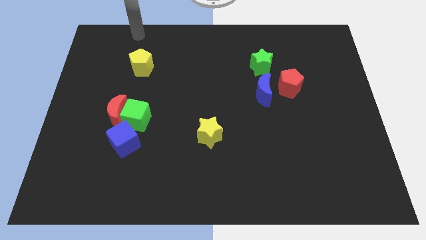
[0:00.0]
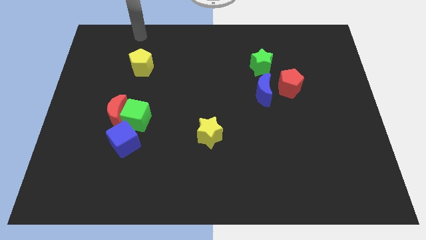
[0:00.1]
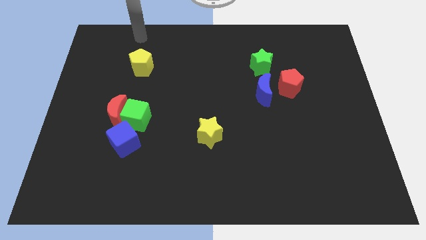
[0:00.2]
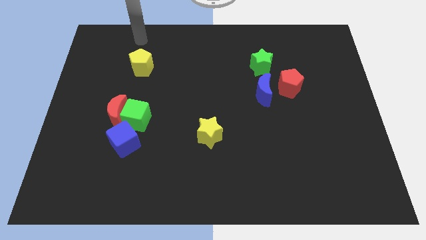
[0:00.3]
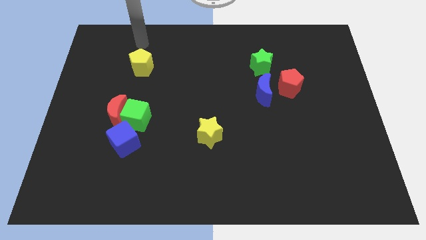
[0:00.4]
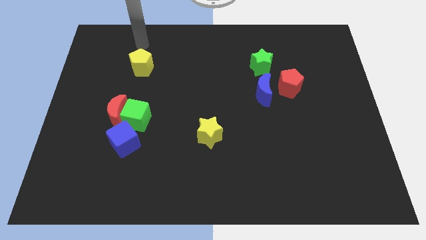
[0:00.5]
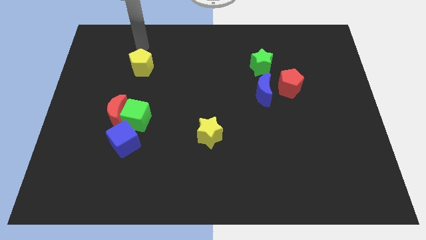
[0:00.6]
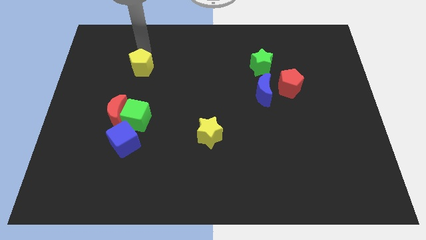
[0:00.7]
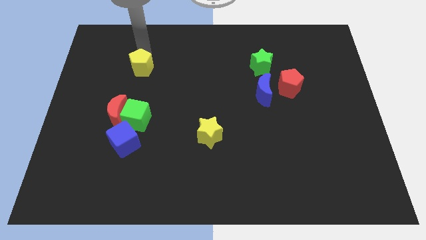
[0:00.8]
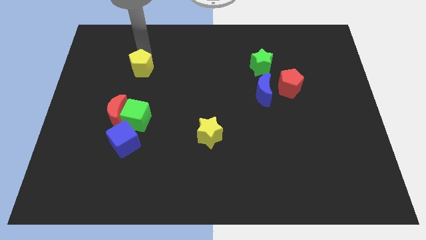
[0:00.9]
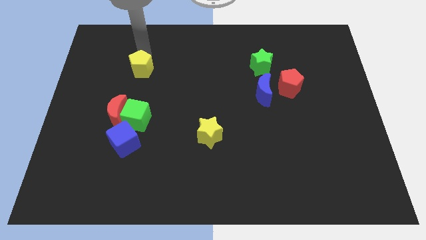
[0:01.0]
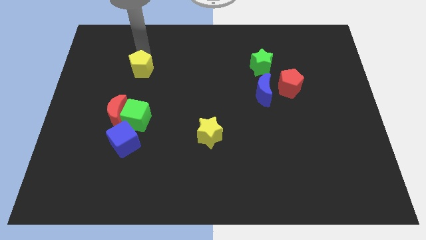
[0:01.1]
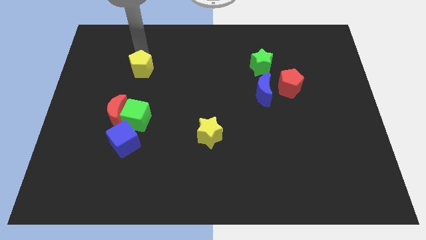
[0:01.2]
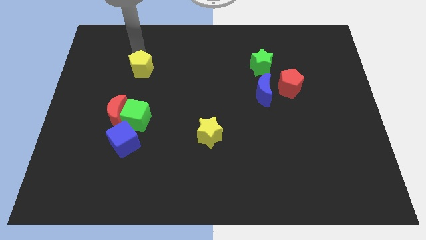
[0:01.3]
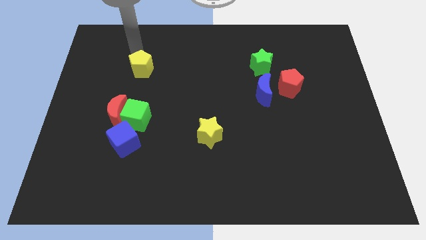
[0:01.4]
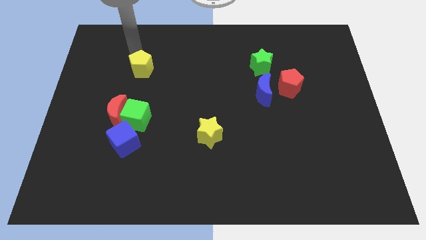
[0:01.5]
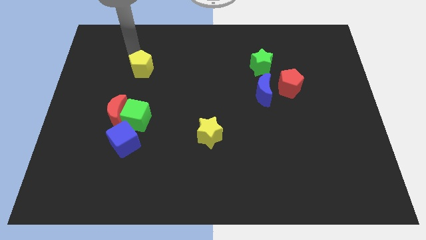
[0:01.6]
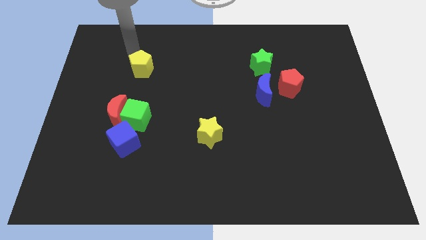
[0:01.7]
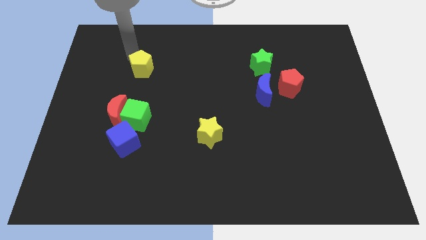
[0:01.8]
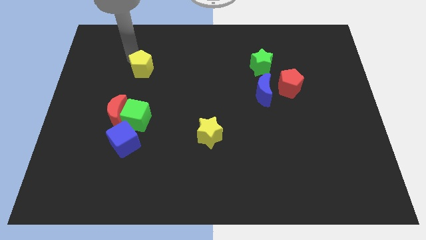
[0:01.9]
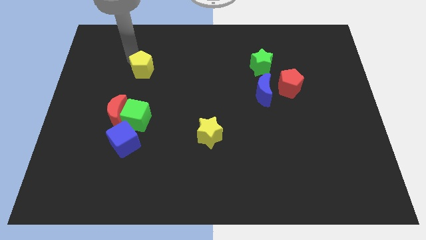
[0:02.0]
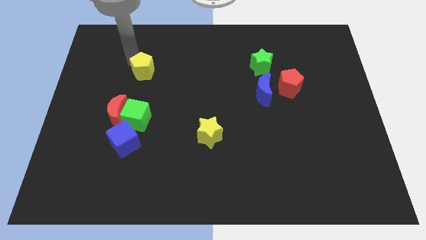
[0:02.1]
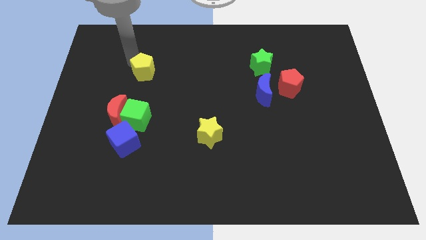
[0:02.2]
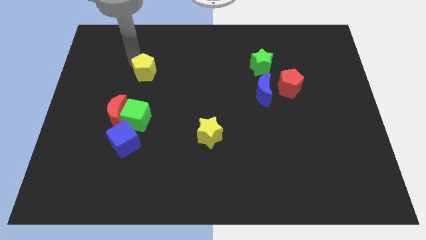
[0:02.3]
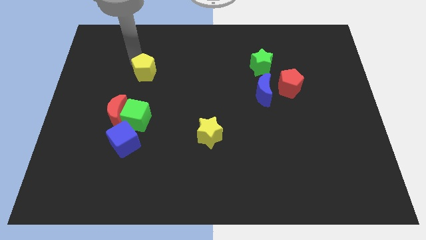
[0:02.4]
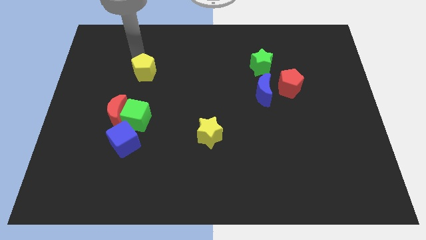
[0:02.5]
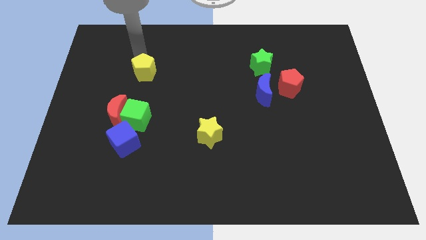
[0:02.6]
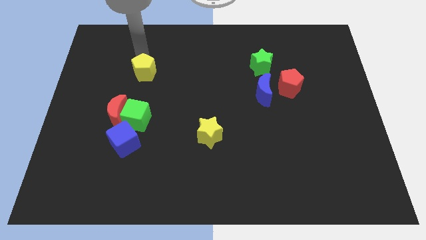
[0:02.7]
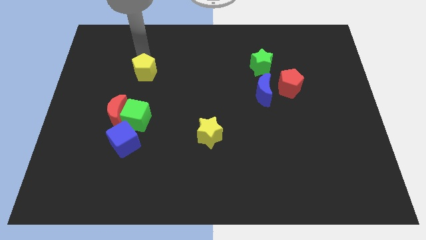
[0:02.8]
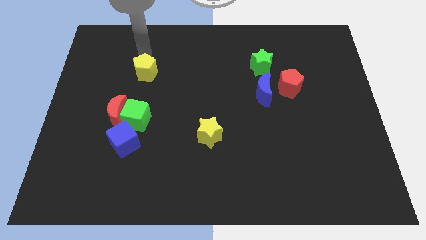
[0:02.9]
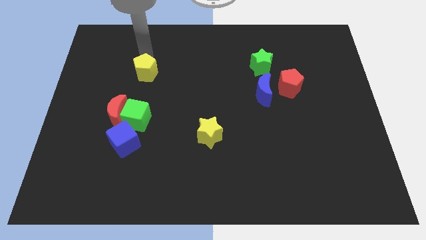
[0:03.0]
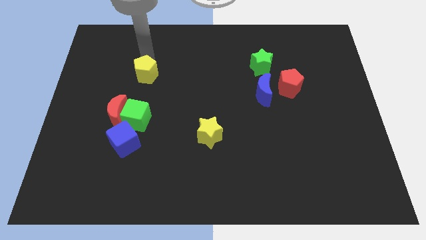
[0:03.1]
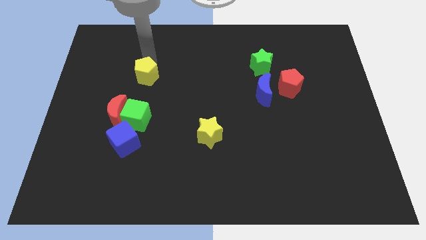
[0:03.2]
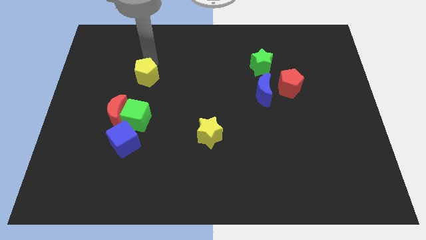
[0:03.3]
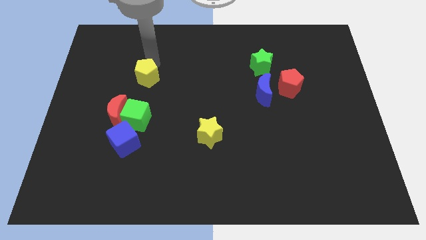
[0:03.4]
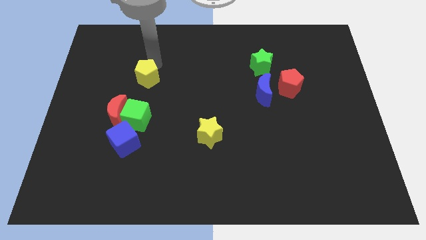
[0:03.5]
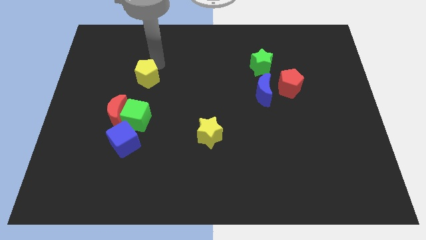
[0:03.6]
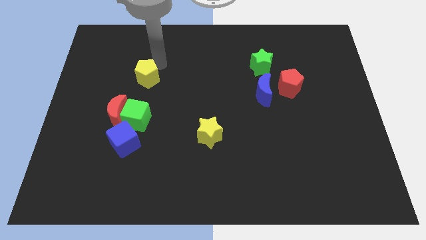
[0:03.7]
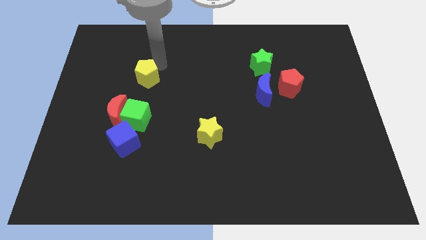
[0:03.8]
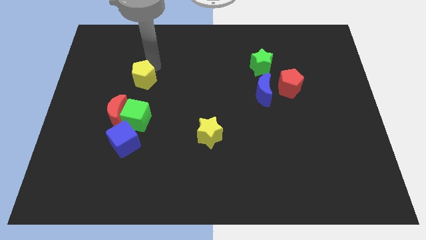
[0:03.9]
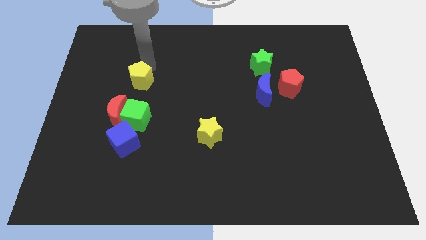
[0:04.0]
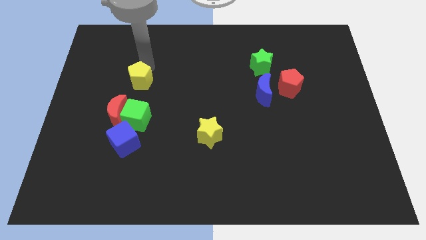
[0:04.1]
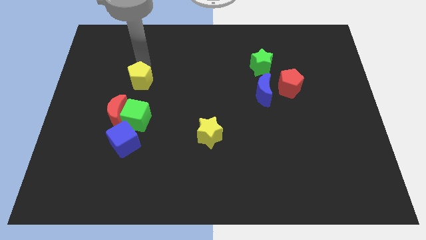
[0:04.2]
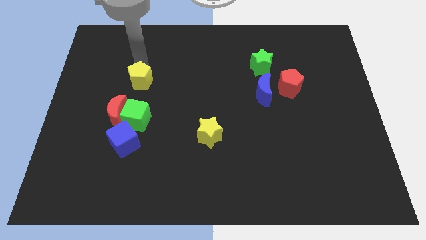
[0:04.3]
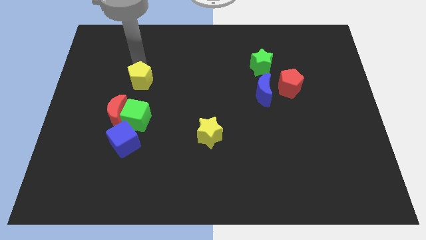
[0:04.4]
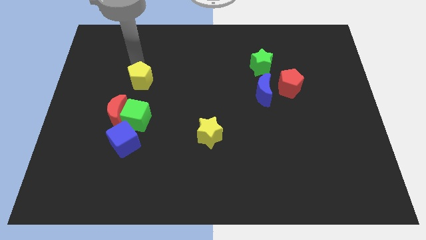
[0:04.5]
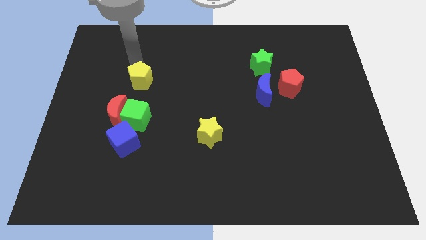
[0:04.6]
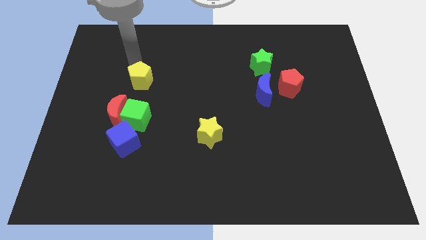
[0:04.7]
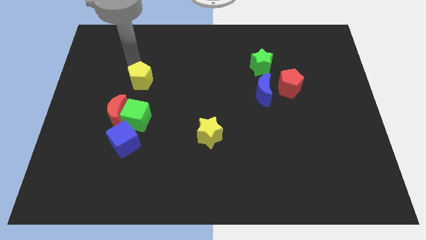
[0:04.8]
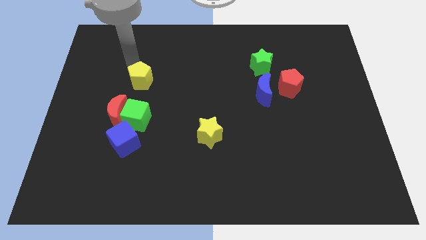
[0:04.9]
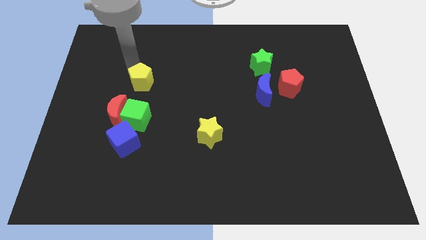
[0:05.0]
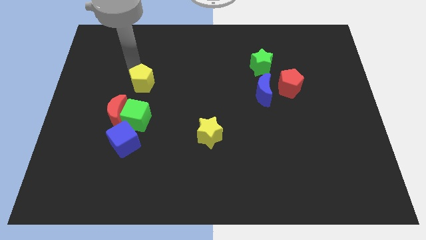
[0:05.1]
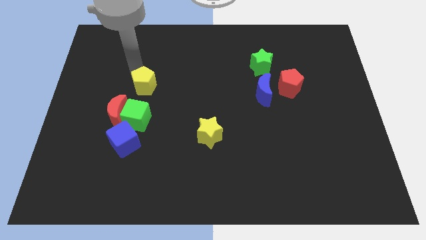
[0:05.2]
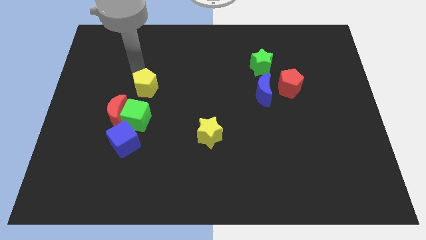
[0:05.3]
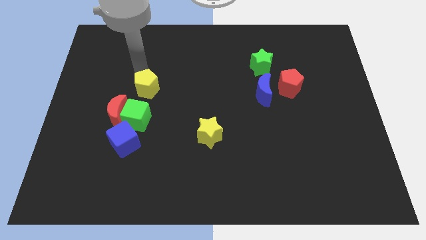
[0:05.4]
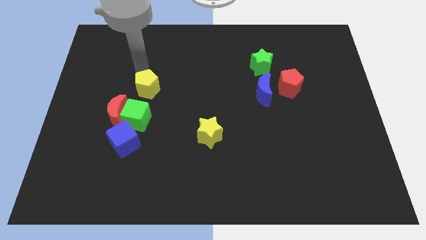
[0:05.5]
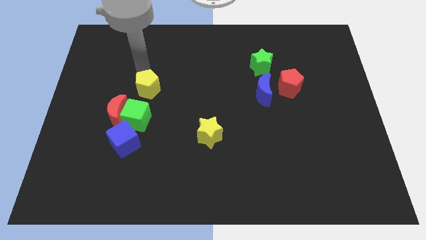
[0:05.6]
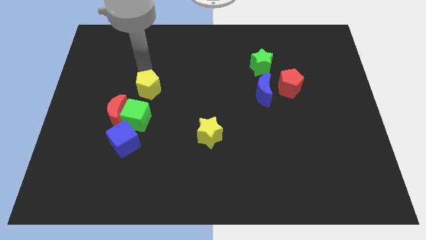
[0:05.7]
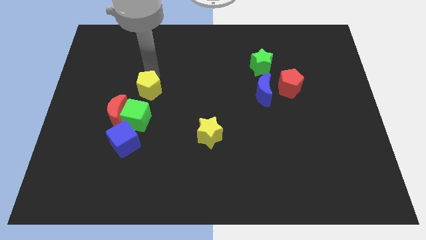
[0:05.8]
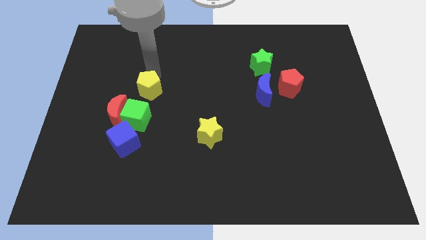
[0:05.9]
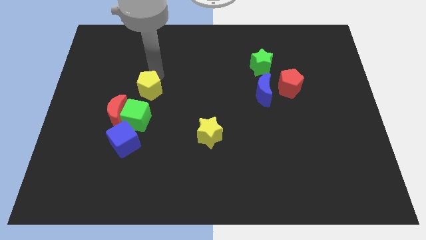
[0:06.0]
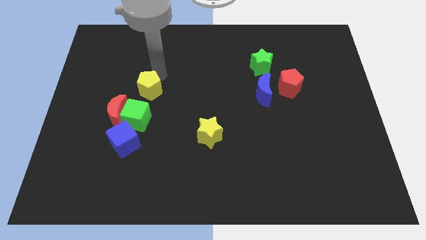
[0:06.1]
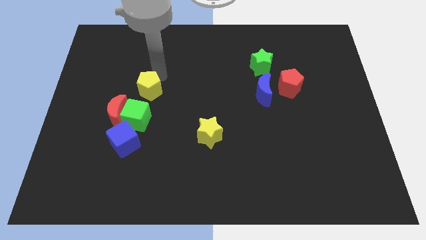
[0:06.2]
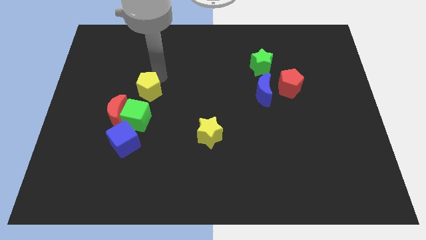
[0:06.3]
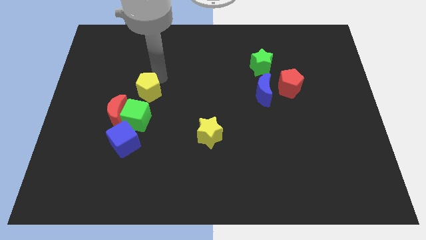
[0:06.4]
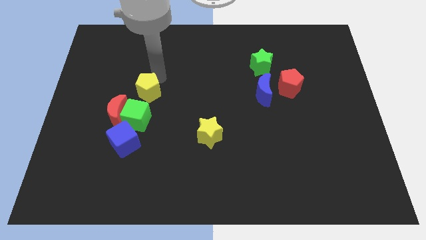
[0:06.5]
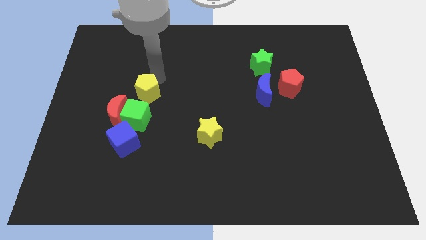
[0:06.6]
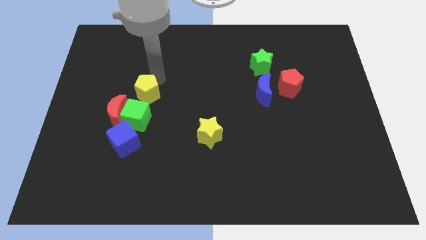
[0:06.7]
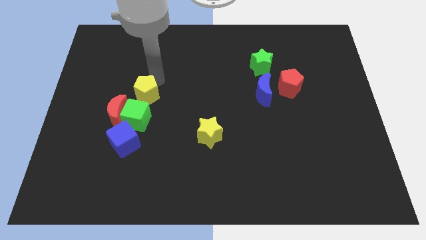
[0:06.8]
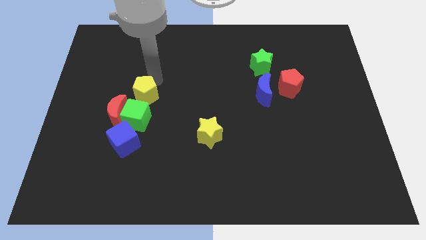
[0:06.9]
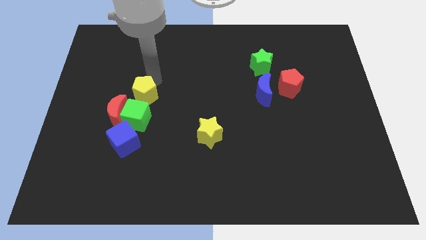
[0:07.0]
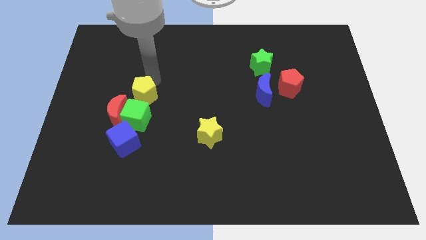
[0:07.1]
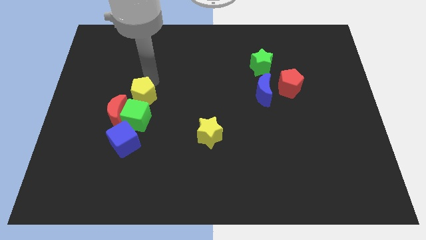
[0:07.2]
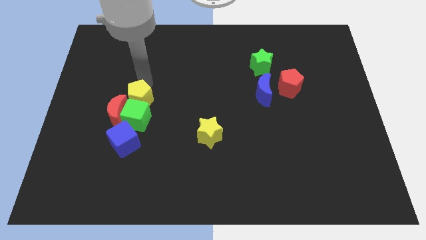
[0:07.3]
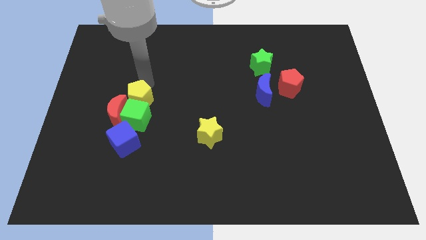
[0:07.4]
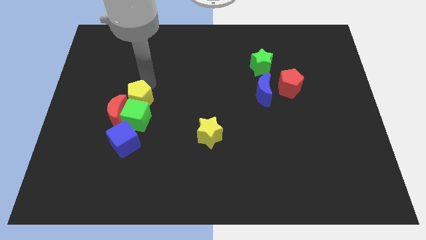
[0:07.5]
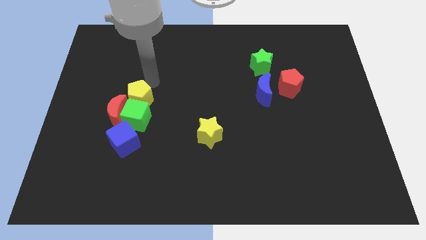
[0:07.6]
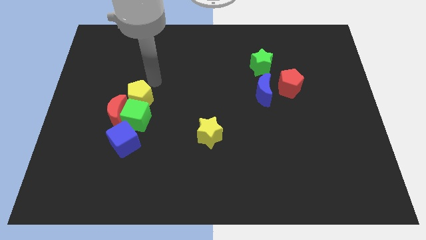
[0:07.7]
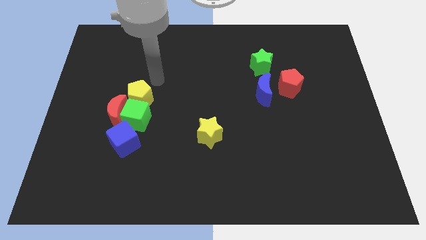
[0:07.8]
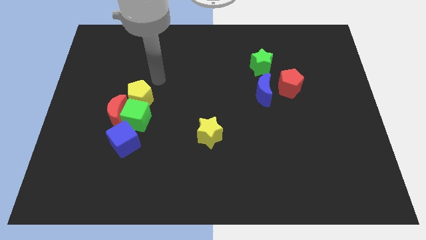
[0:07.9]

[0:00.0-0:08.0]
push the yellow pentagon towards green cube

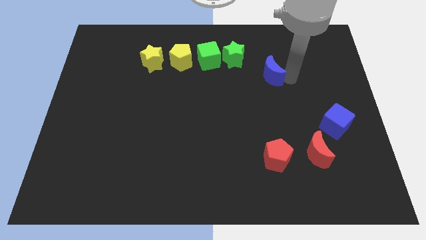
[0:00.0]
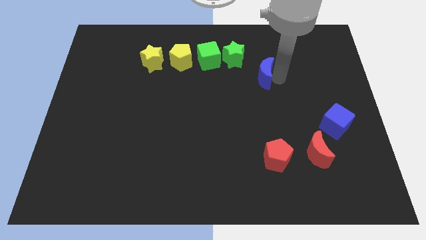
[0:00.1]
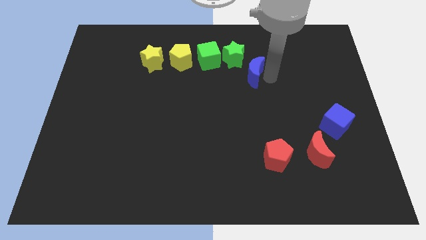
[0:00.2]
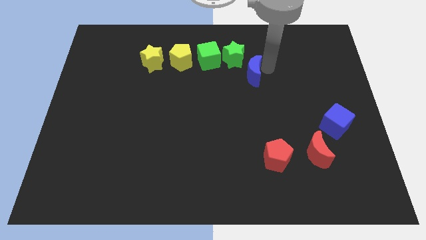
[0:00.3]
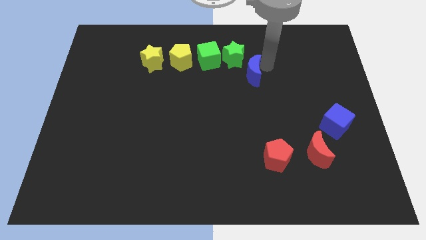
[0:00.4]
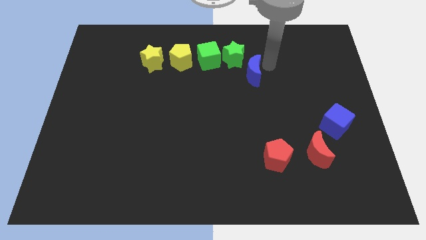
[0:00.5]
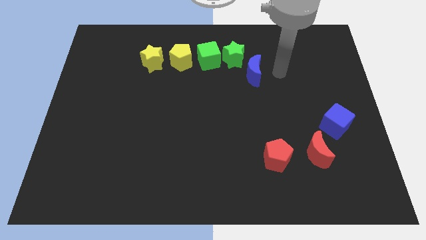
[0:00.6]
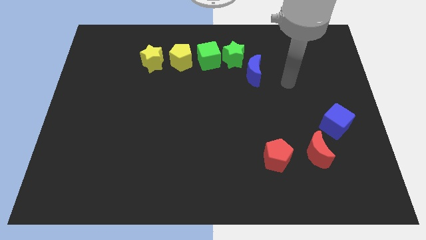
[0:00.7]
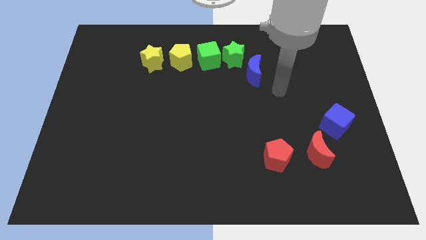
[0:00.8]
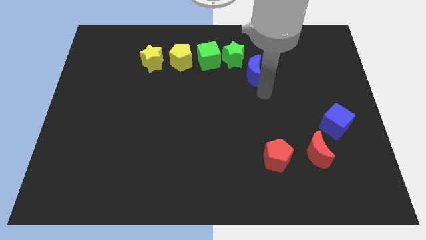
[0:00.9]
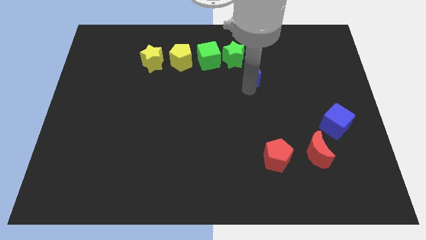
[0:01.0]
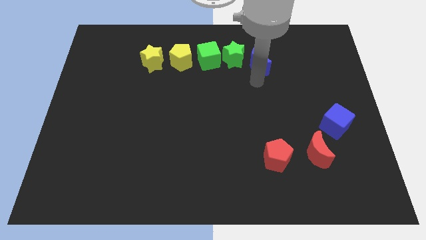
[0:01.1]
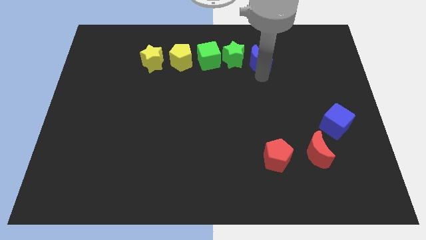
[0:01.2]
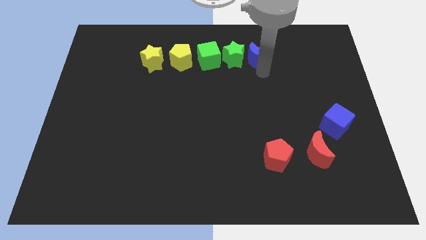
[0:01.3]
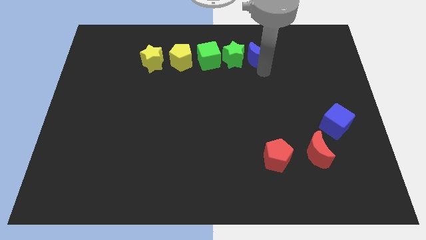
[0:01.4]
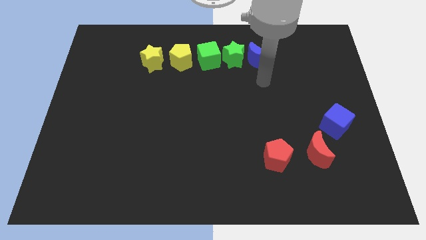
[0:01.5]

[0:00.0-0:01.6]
push the blue crescent towards the right side of the green star
